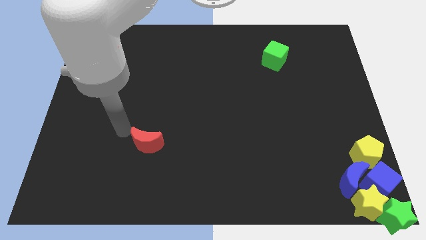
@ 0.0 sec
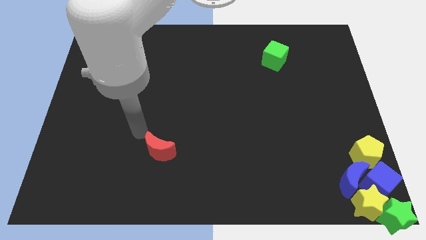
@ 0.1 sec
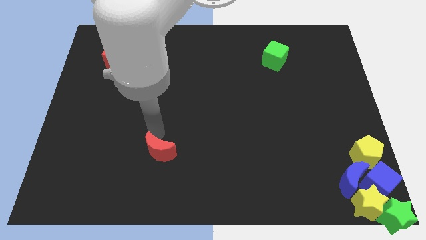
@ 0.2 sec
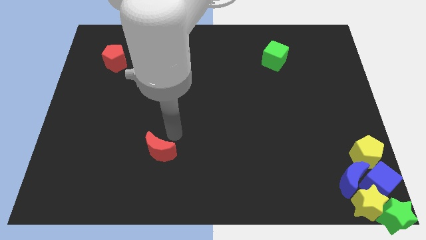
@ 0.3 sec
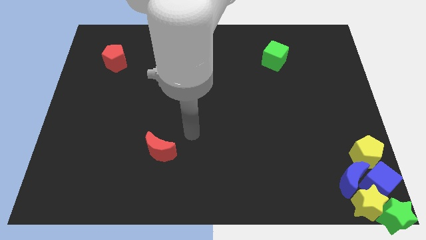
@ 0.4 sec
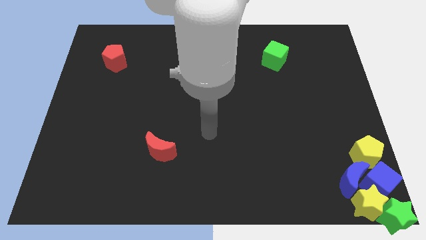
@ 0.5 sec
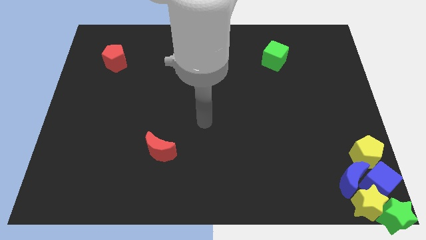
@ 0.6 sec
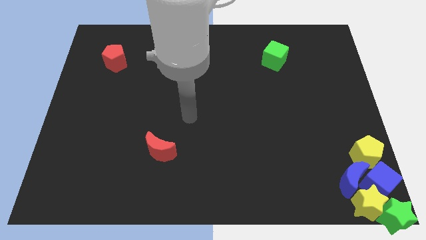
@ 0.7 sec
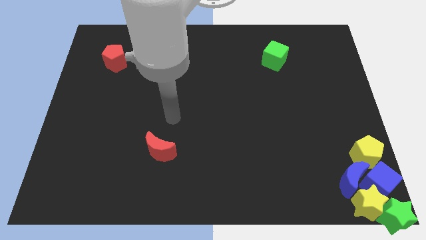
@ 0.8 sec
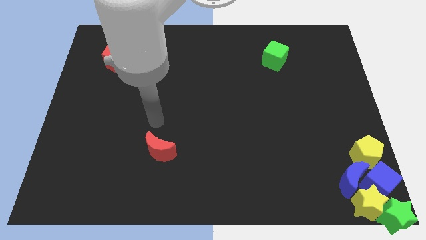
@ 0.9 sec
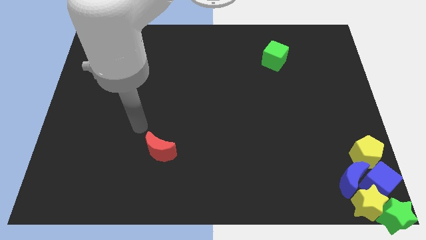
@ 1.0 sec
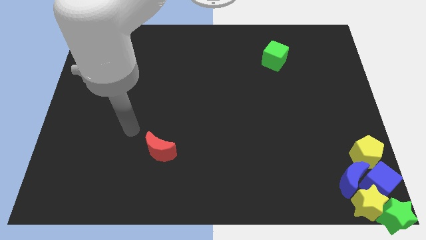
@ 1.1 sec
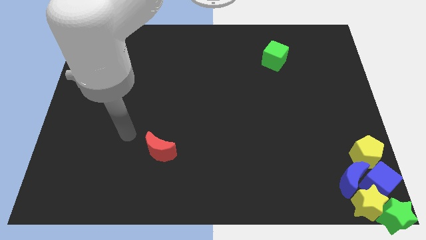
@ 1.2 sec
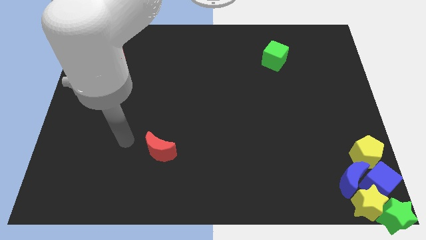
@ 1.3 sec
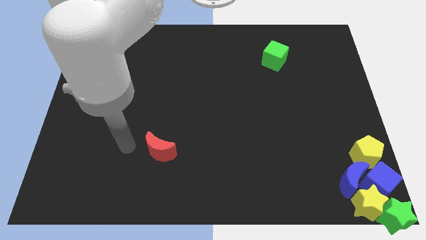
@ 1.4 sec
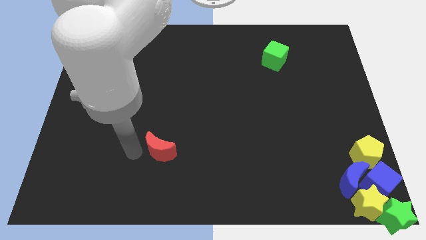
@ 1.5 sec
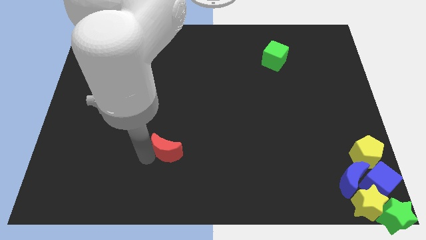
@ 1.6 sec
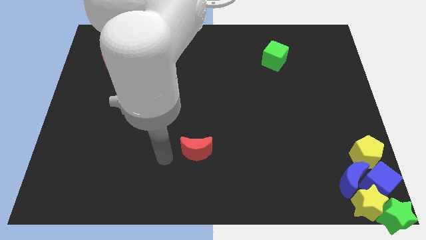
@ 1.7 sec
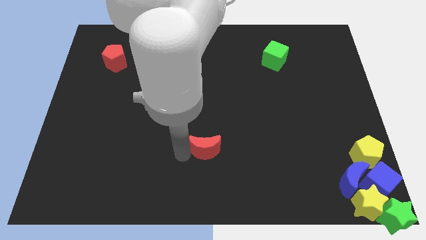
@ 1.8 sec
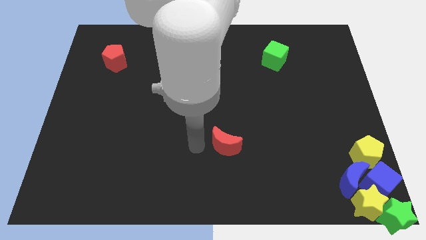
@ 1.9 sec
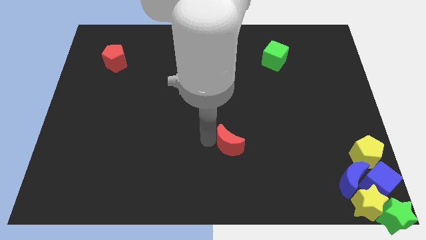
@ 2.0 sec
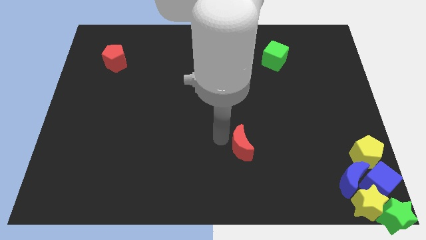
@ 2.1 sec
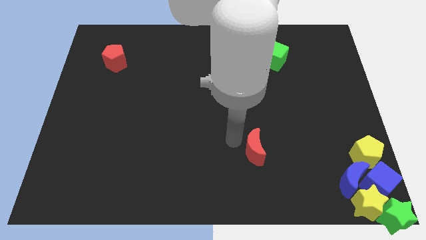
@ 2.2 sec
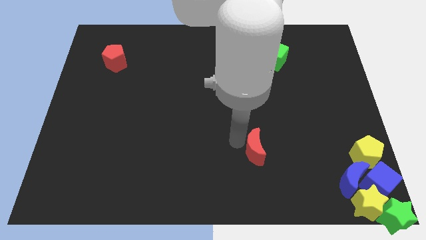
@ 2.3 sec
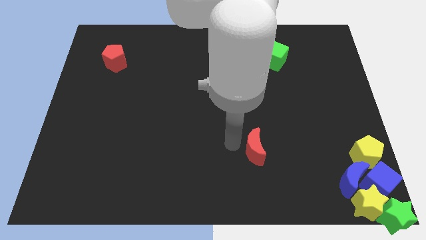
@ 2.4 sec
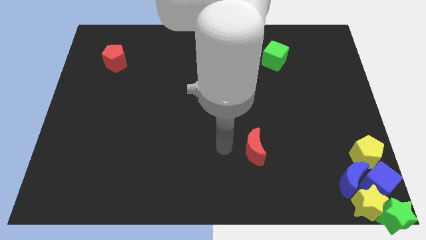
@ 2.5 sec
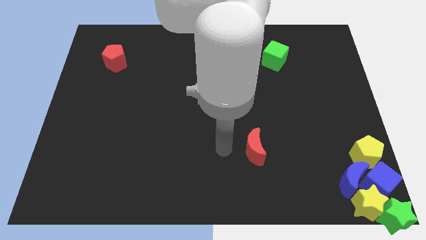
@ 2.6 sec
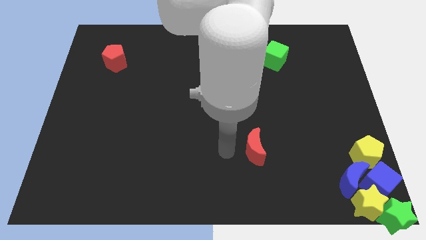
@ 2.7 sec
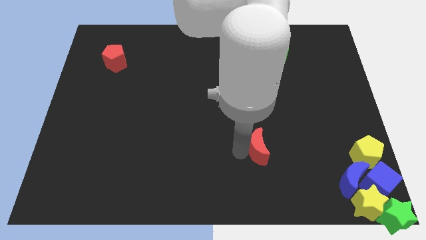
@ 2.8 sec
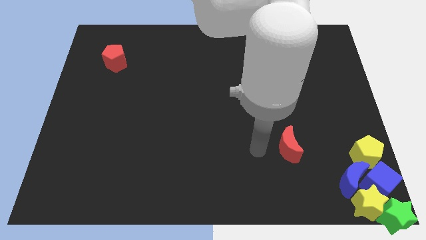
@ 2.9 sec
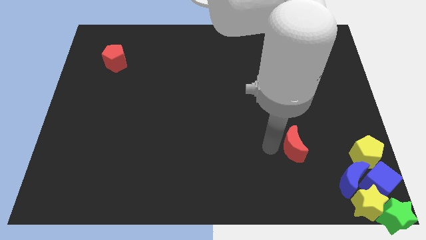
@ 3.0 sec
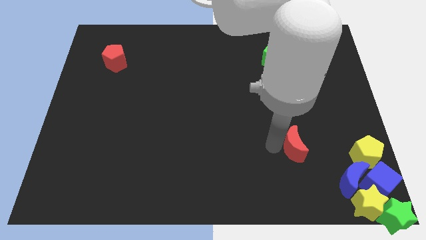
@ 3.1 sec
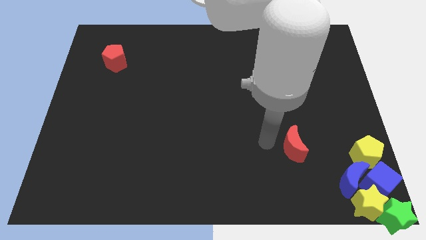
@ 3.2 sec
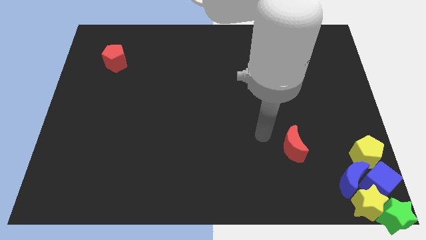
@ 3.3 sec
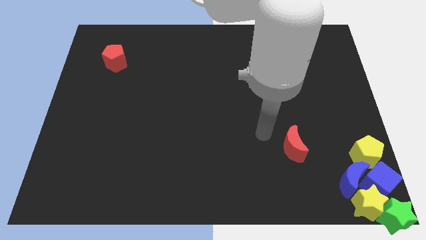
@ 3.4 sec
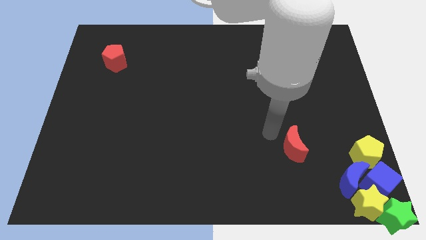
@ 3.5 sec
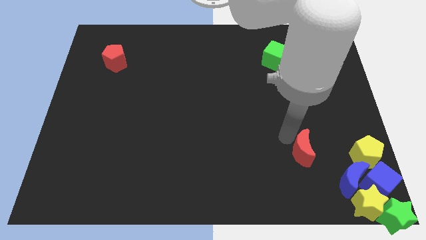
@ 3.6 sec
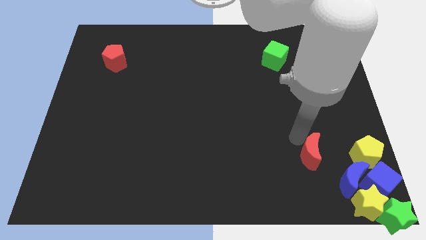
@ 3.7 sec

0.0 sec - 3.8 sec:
move the red moon horizontally to the left side of the yellow pentagon

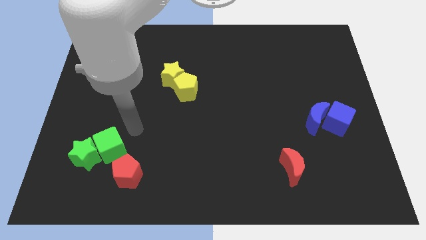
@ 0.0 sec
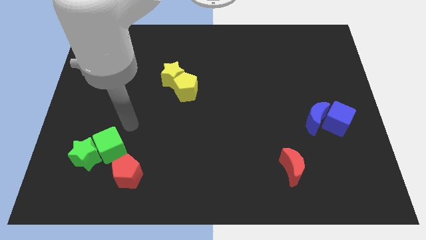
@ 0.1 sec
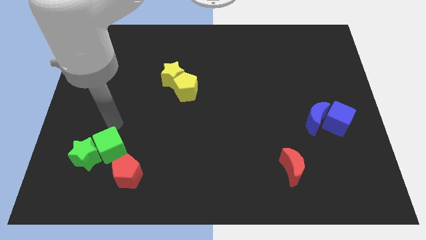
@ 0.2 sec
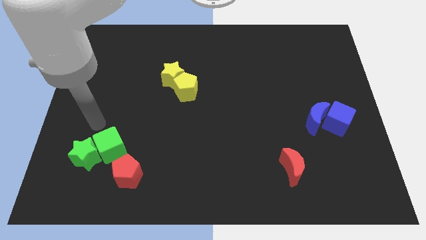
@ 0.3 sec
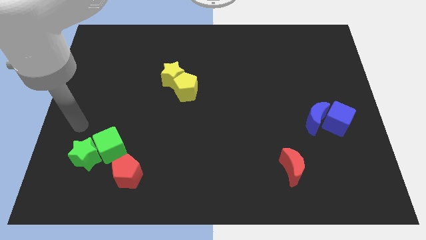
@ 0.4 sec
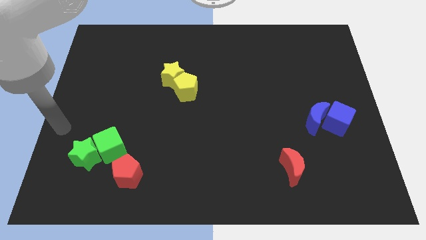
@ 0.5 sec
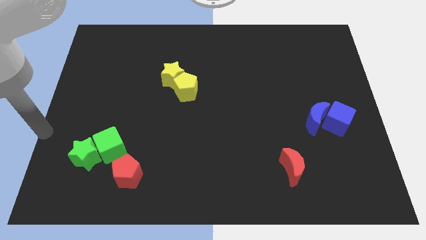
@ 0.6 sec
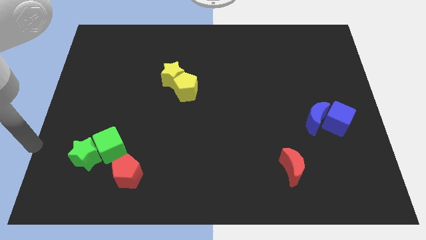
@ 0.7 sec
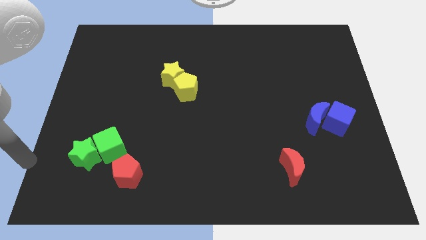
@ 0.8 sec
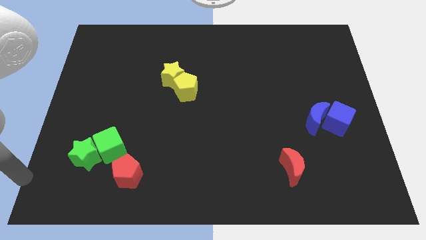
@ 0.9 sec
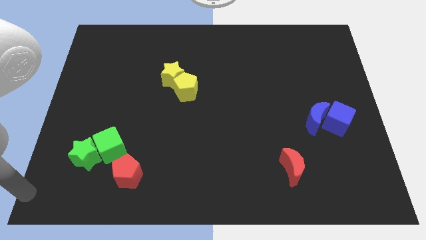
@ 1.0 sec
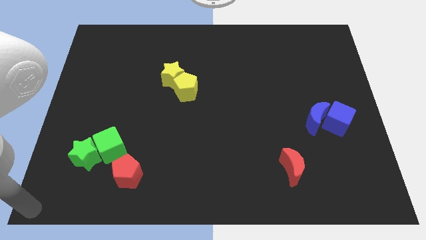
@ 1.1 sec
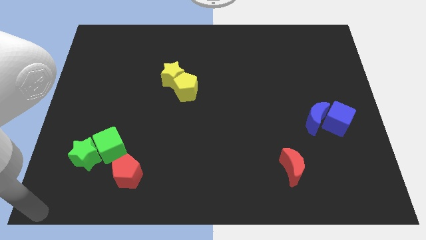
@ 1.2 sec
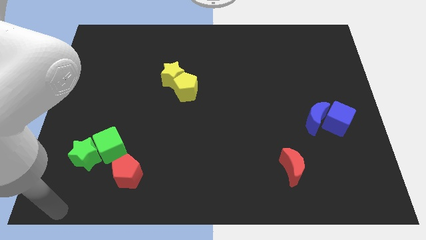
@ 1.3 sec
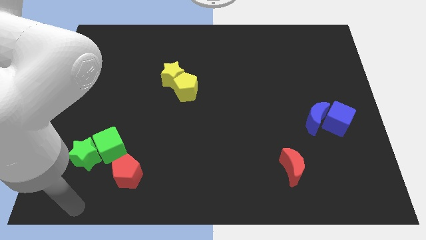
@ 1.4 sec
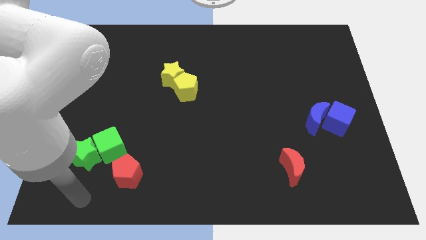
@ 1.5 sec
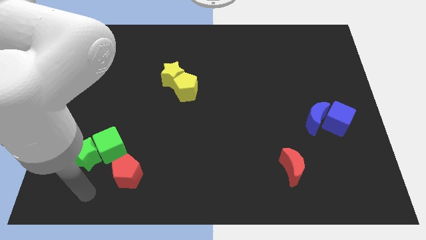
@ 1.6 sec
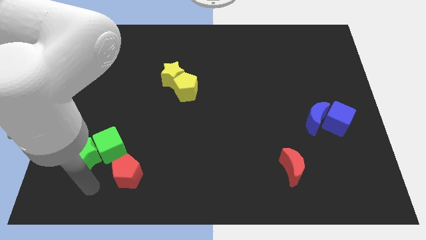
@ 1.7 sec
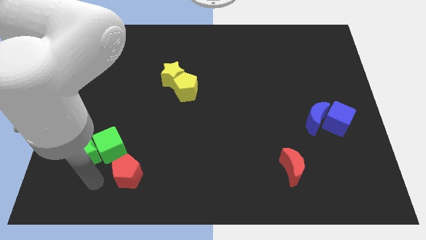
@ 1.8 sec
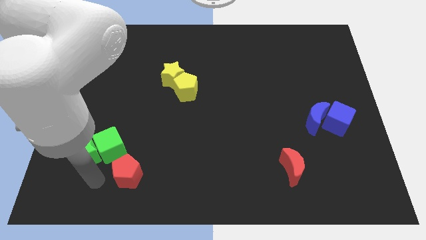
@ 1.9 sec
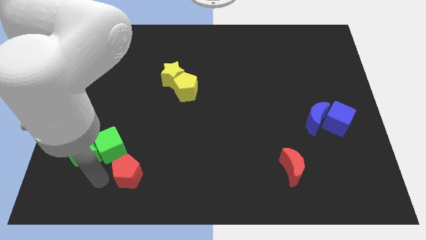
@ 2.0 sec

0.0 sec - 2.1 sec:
move your arm to the left of the red pentagon

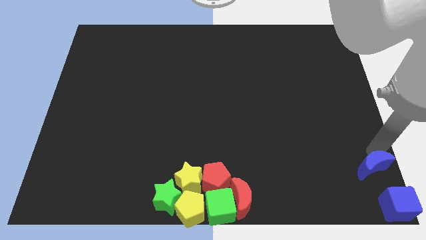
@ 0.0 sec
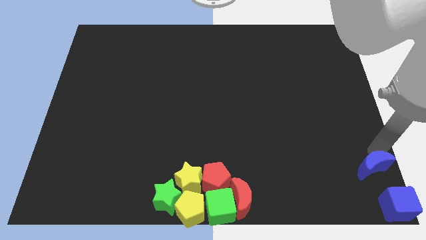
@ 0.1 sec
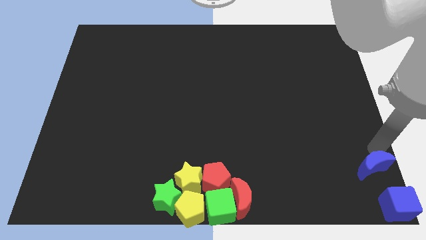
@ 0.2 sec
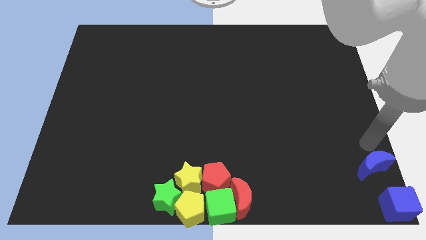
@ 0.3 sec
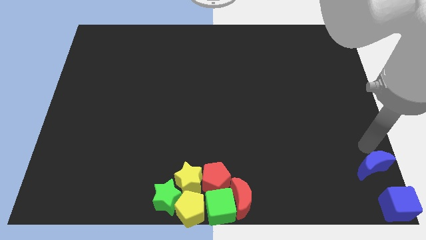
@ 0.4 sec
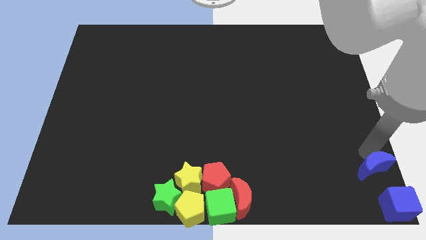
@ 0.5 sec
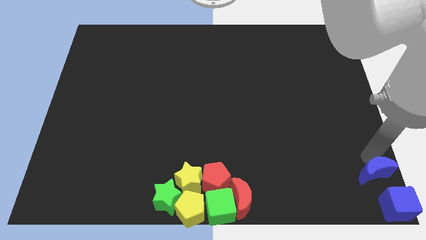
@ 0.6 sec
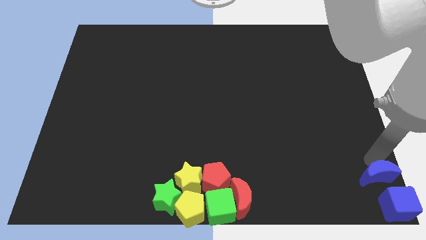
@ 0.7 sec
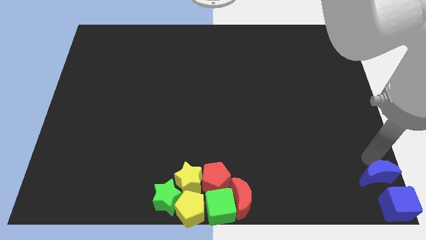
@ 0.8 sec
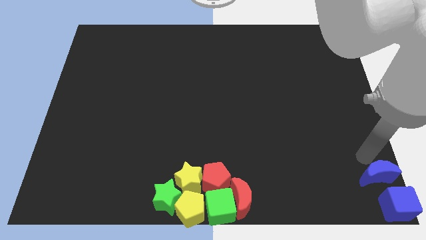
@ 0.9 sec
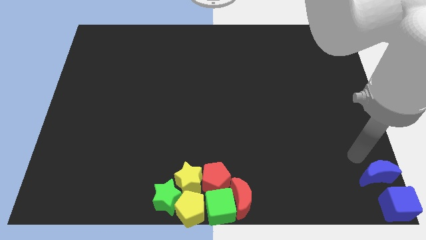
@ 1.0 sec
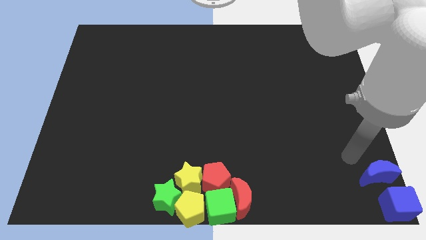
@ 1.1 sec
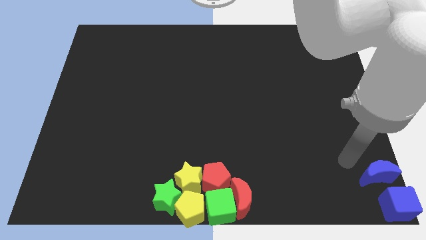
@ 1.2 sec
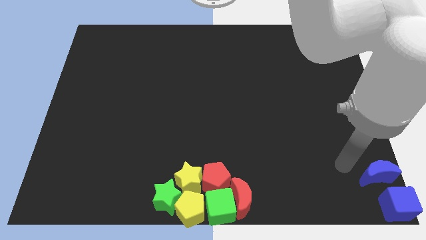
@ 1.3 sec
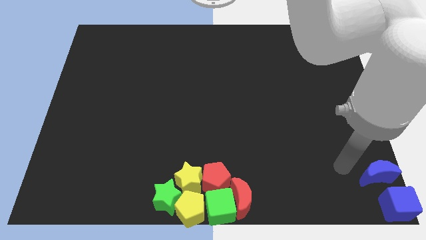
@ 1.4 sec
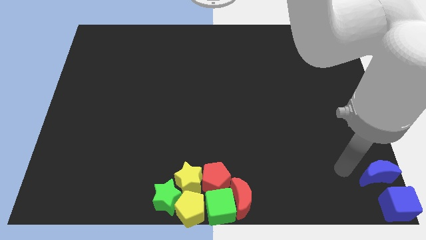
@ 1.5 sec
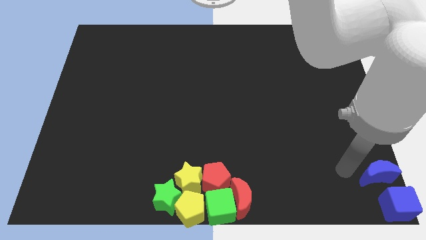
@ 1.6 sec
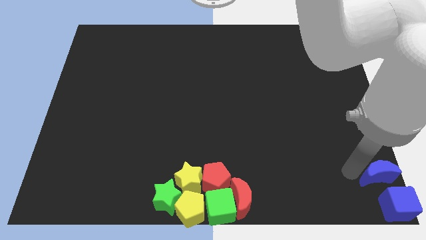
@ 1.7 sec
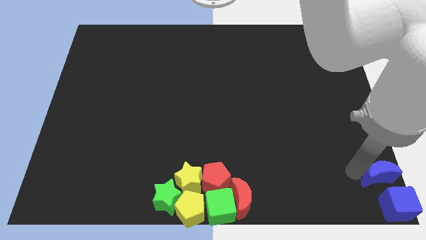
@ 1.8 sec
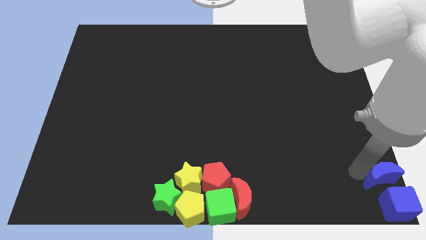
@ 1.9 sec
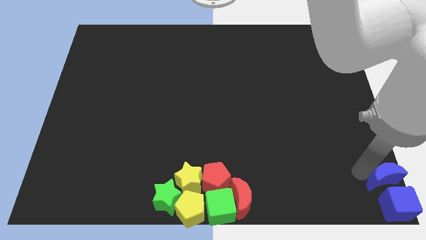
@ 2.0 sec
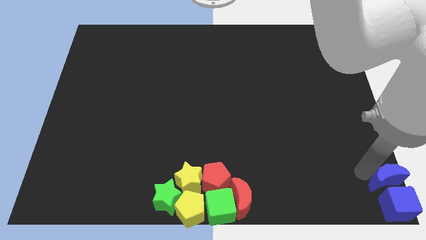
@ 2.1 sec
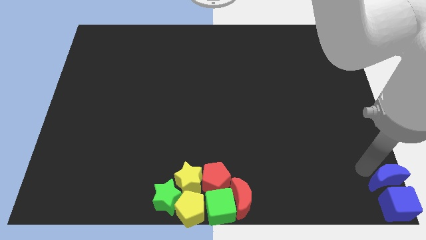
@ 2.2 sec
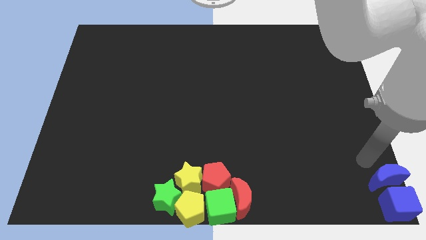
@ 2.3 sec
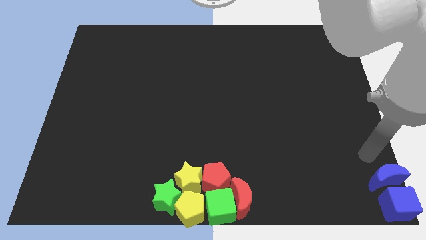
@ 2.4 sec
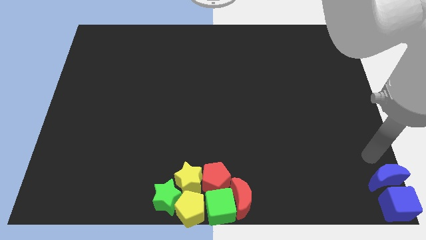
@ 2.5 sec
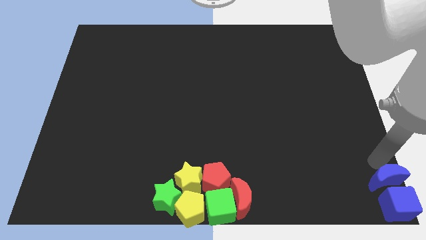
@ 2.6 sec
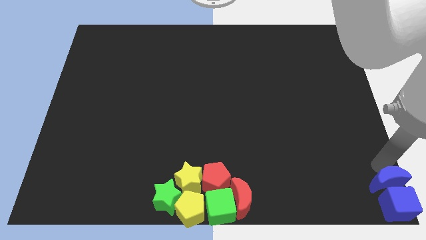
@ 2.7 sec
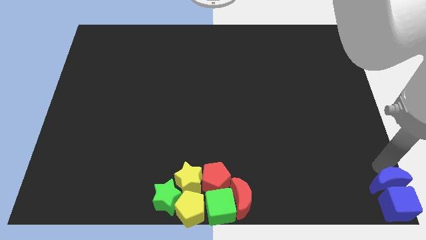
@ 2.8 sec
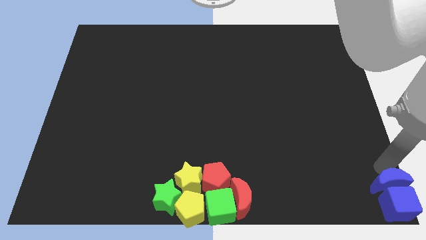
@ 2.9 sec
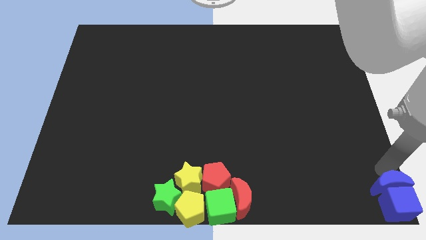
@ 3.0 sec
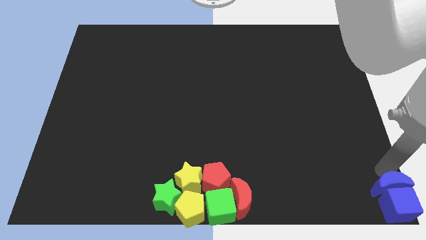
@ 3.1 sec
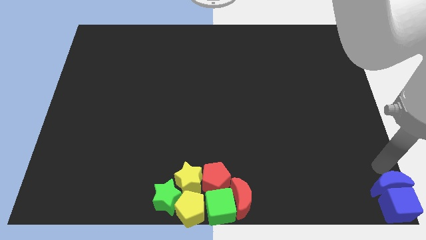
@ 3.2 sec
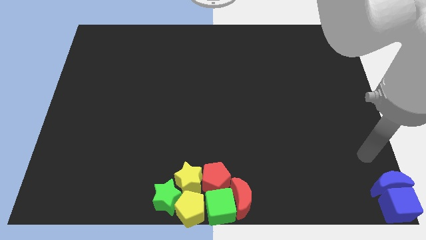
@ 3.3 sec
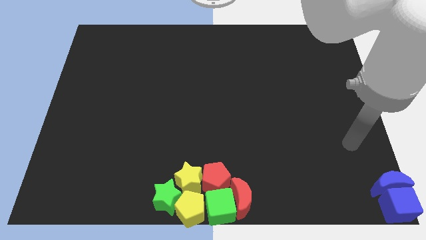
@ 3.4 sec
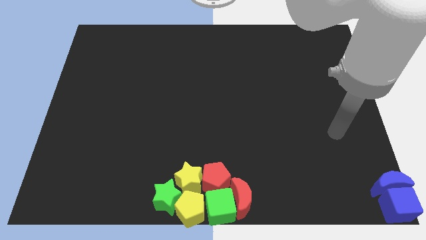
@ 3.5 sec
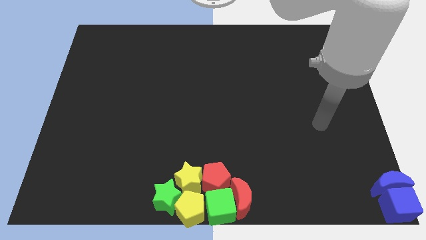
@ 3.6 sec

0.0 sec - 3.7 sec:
push the blue crescent into the blue cube
